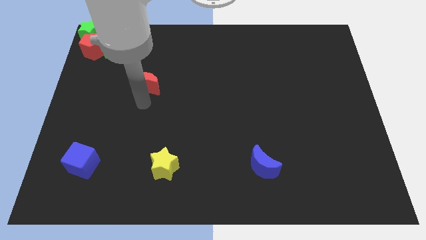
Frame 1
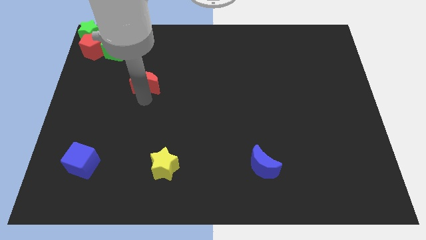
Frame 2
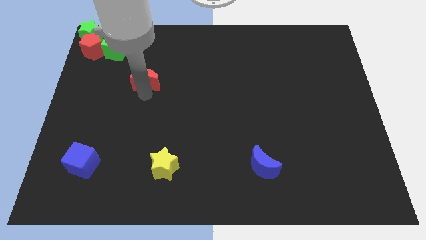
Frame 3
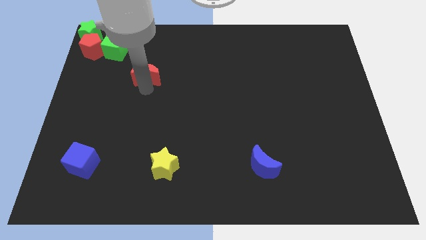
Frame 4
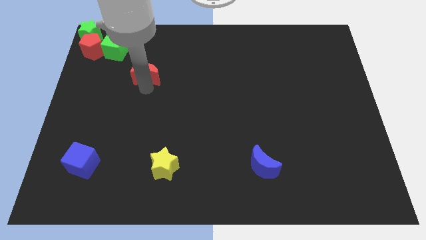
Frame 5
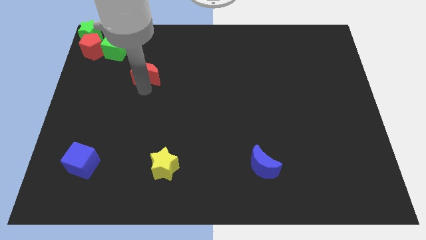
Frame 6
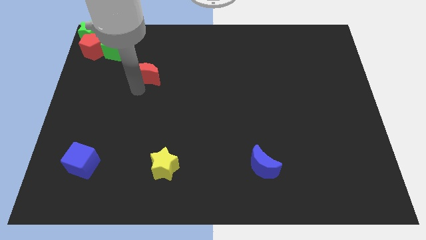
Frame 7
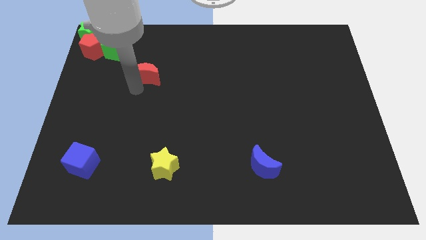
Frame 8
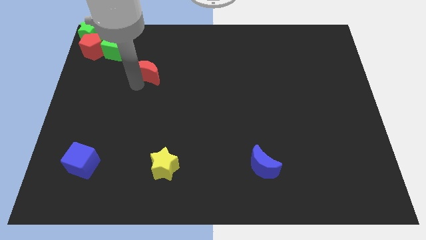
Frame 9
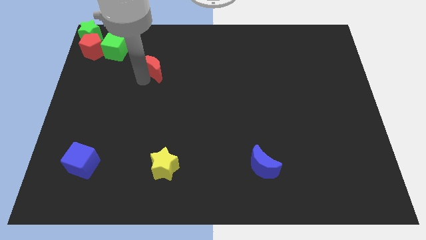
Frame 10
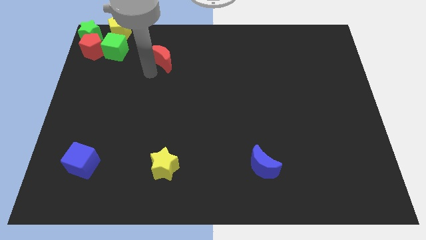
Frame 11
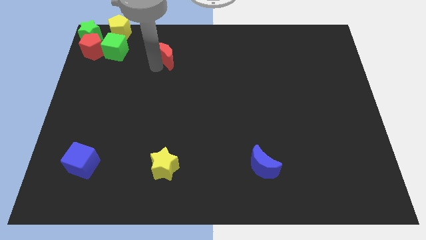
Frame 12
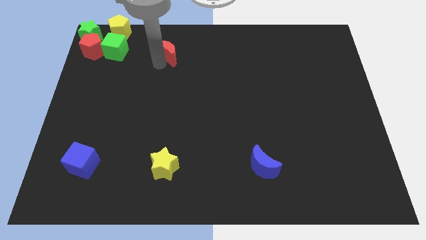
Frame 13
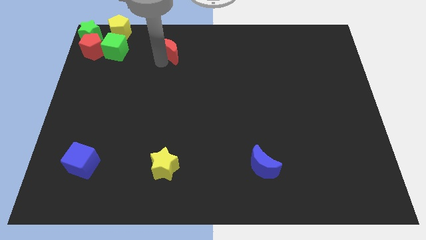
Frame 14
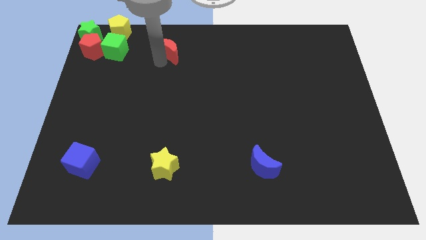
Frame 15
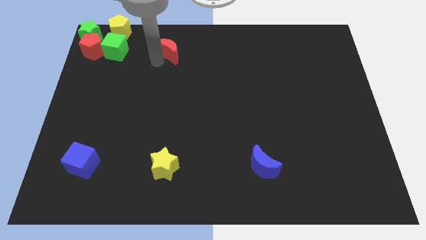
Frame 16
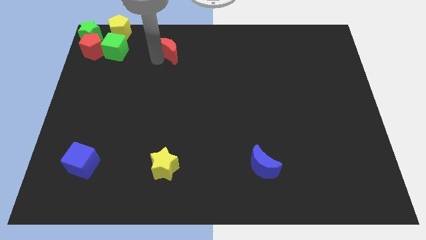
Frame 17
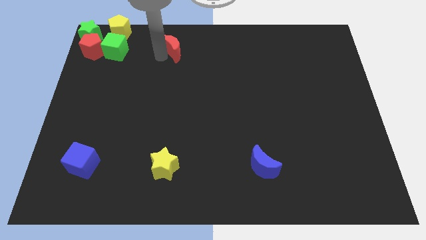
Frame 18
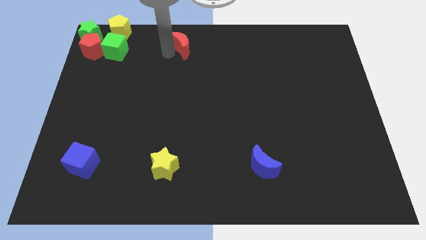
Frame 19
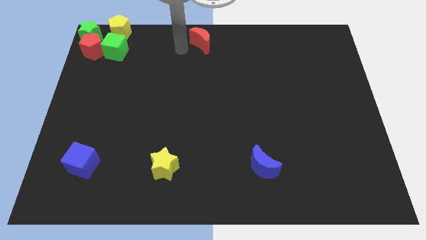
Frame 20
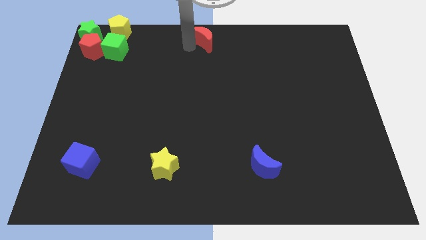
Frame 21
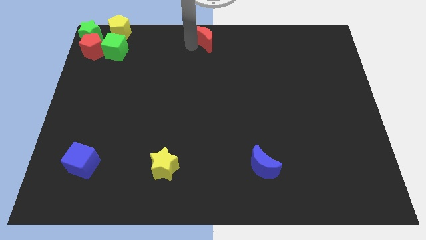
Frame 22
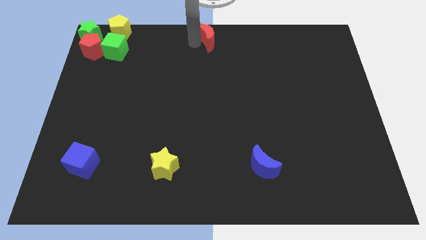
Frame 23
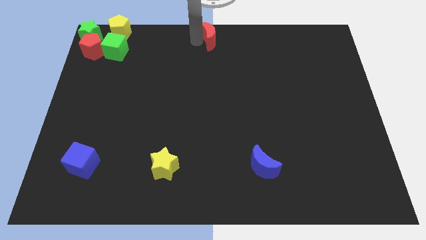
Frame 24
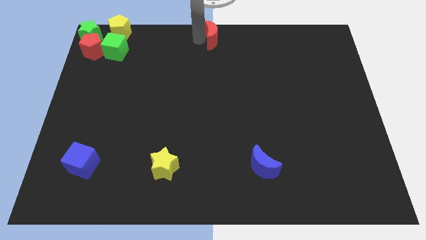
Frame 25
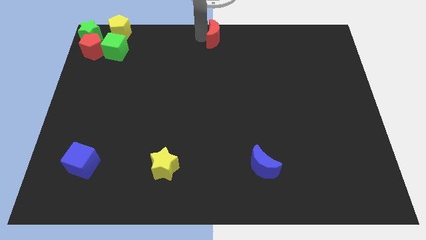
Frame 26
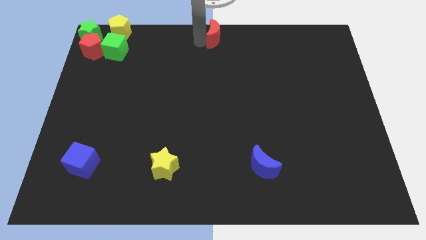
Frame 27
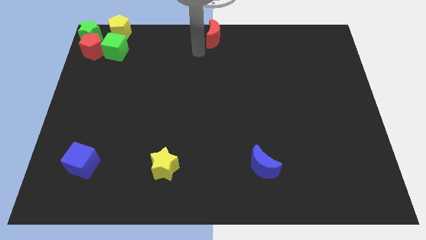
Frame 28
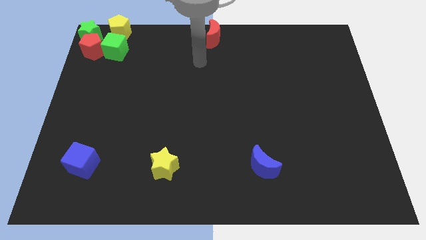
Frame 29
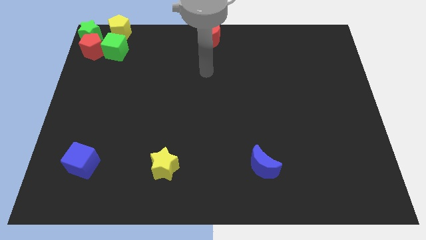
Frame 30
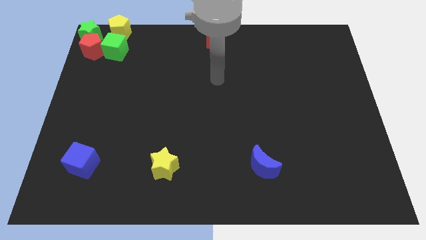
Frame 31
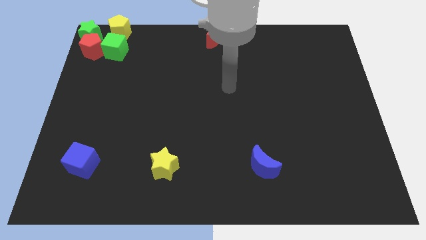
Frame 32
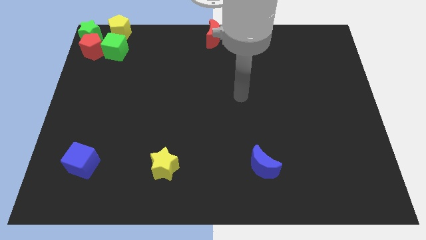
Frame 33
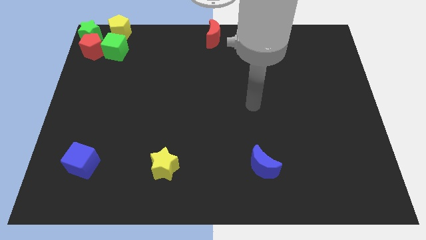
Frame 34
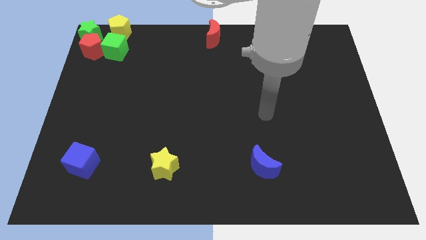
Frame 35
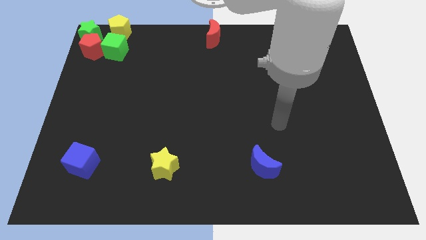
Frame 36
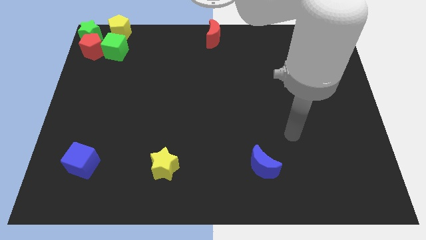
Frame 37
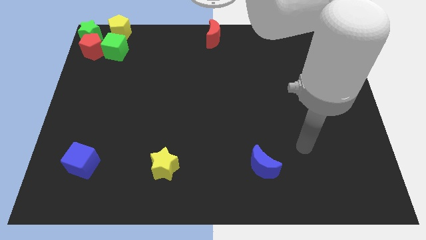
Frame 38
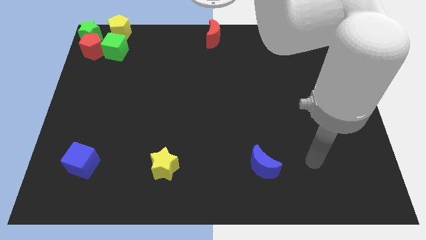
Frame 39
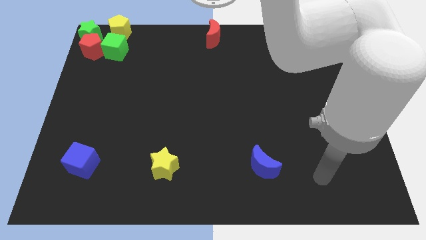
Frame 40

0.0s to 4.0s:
drag the red moon diagonally top right to the yellow star

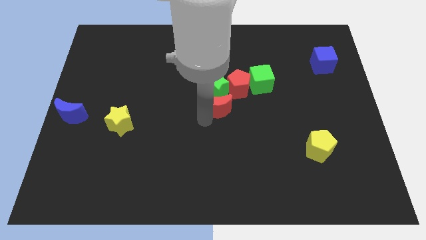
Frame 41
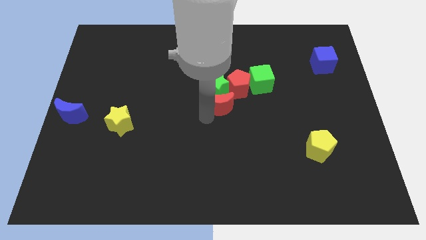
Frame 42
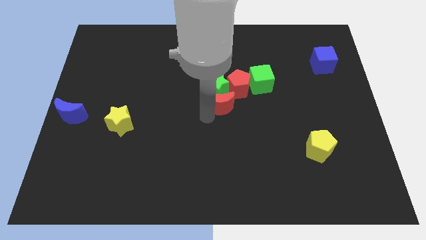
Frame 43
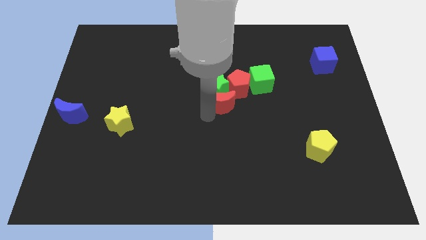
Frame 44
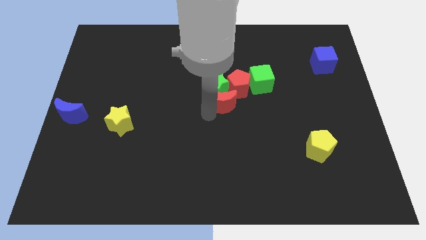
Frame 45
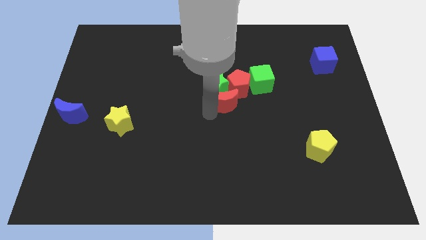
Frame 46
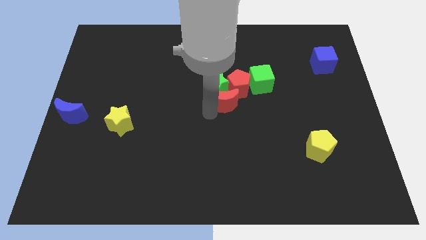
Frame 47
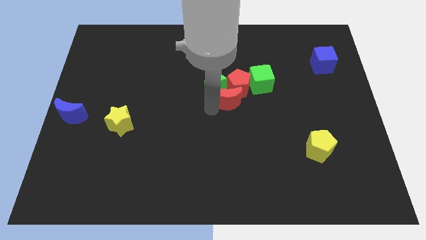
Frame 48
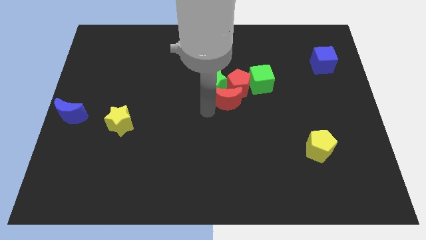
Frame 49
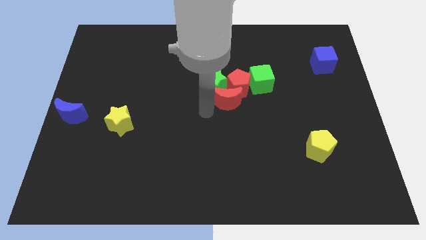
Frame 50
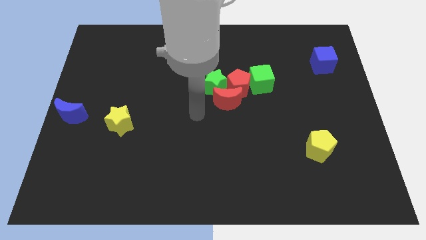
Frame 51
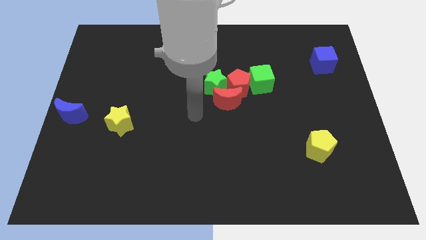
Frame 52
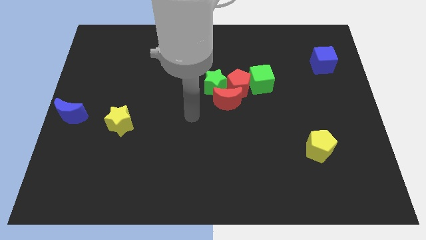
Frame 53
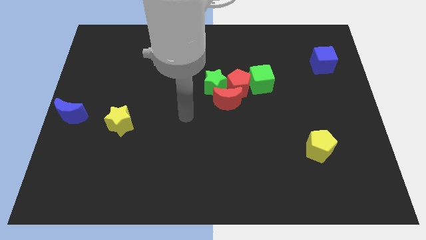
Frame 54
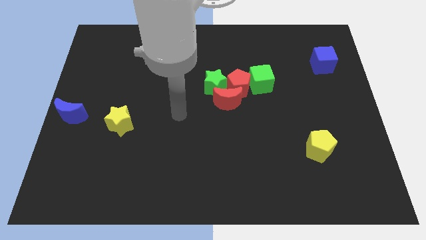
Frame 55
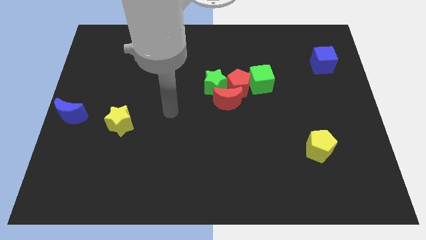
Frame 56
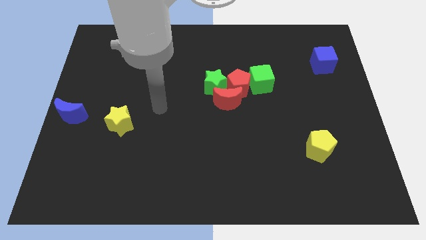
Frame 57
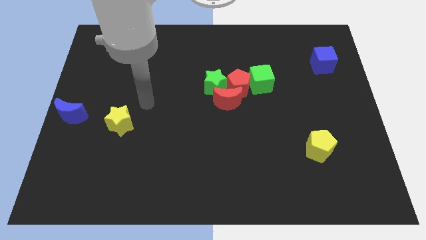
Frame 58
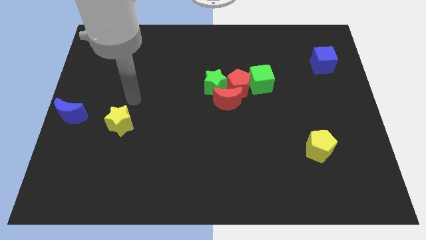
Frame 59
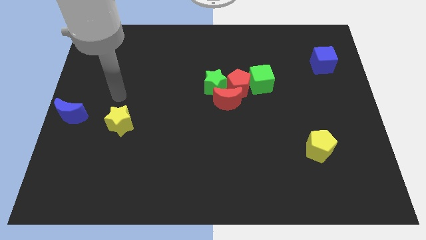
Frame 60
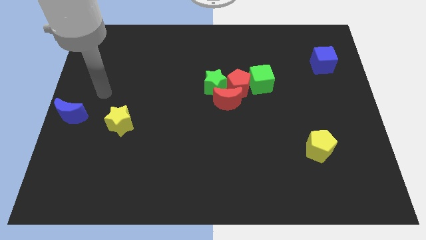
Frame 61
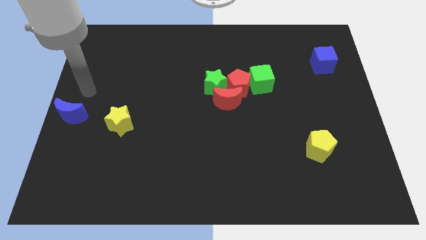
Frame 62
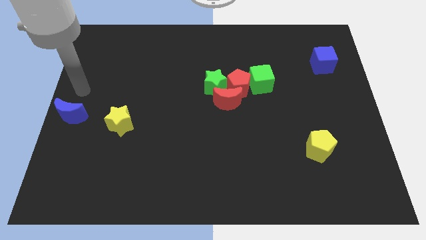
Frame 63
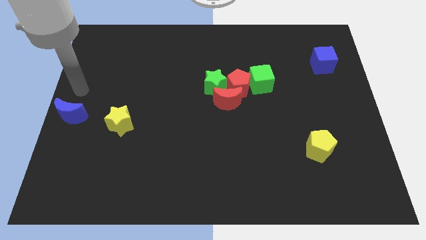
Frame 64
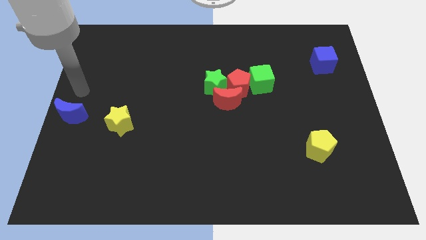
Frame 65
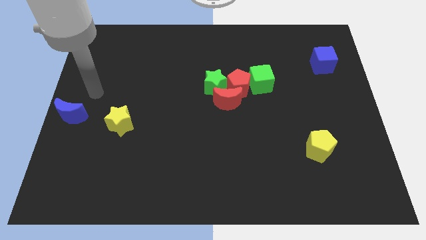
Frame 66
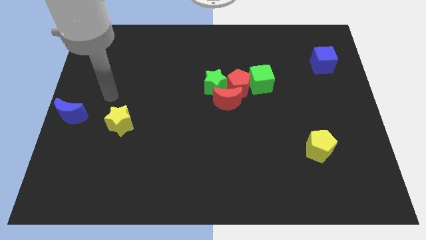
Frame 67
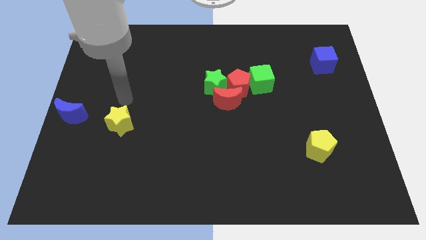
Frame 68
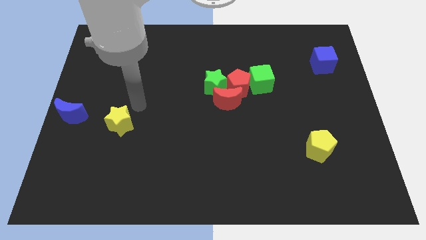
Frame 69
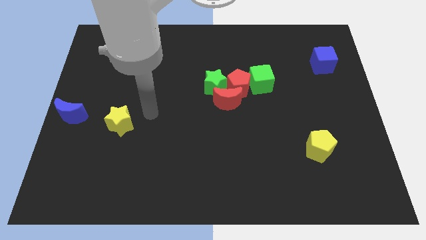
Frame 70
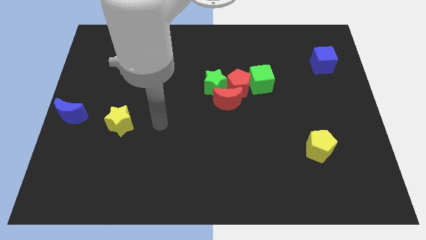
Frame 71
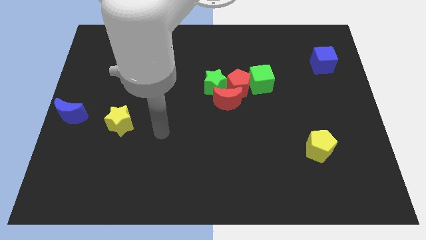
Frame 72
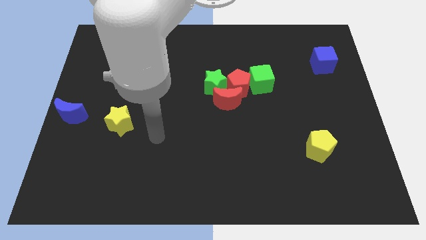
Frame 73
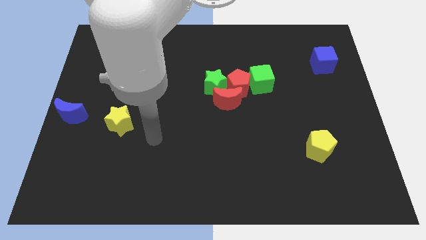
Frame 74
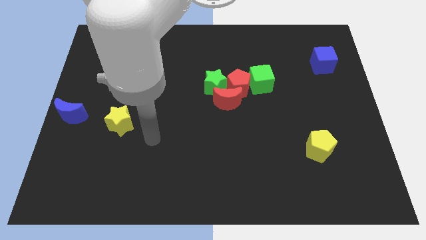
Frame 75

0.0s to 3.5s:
make a triangle out of red blocks and the green star

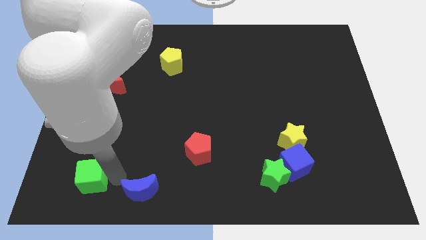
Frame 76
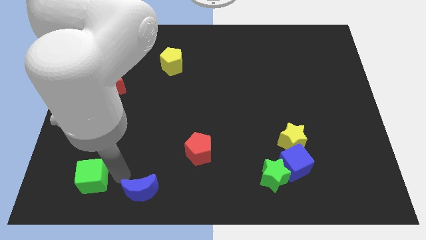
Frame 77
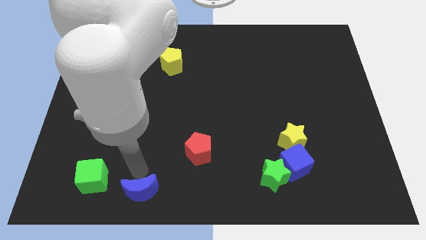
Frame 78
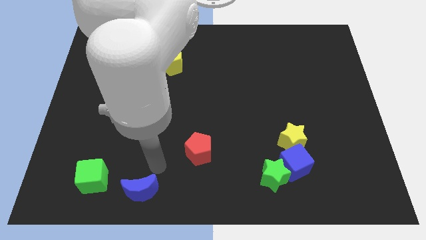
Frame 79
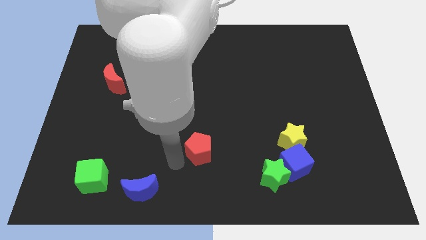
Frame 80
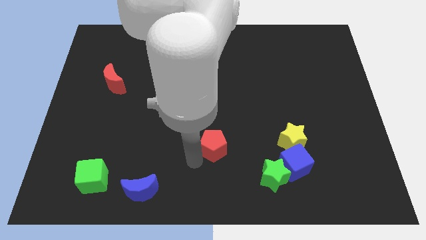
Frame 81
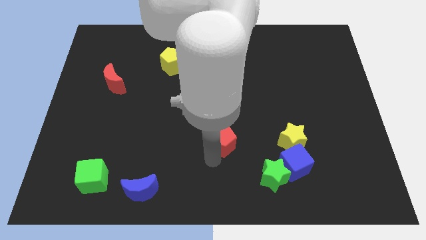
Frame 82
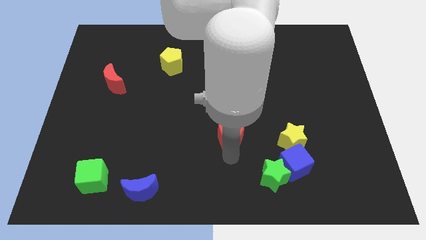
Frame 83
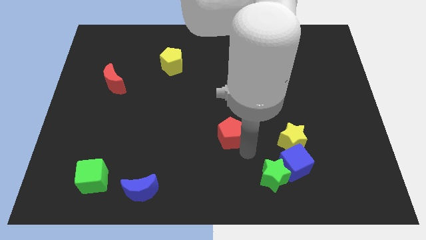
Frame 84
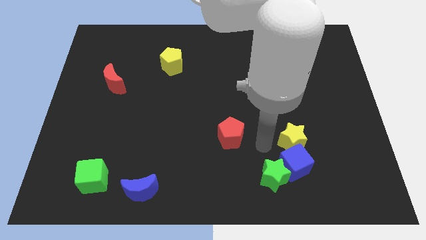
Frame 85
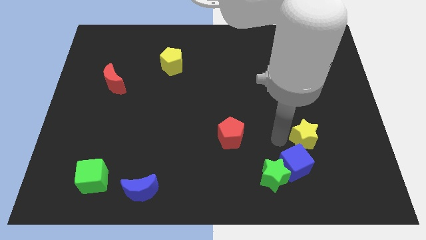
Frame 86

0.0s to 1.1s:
slightly push the red pentagon to the top of the board

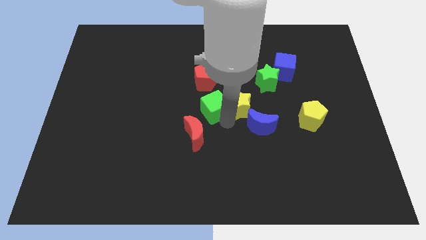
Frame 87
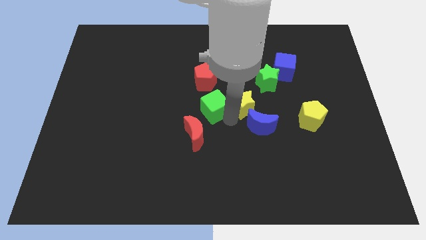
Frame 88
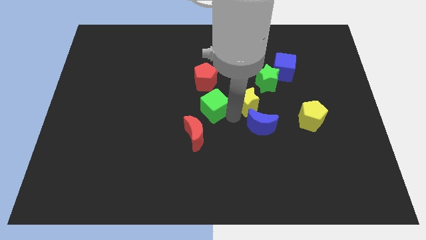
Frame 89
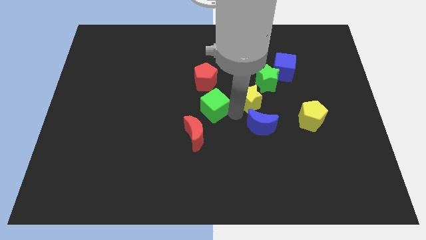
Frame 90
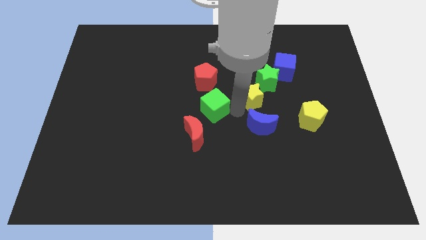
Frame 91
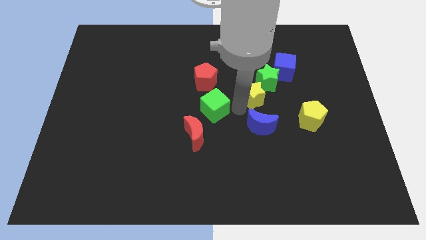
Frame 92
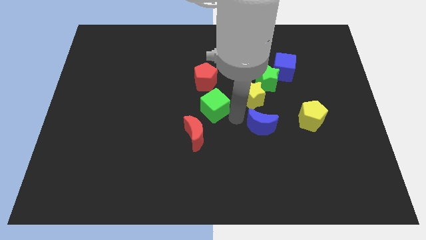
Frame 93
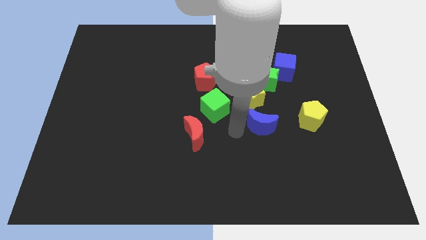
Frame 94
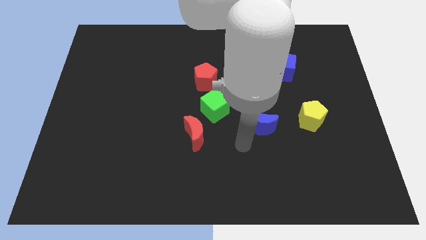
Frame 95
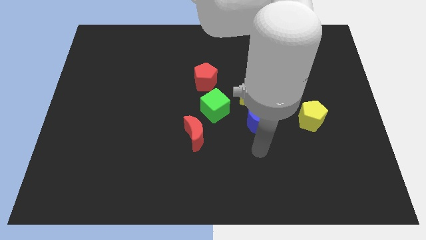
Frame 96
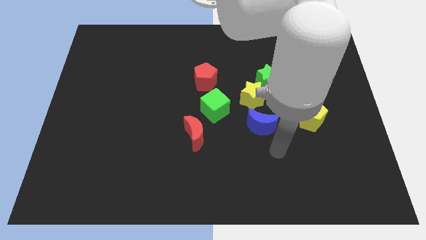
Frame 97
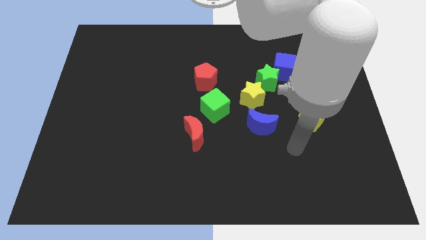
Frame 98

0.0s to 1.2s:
slide the yellow star to the bottom left side of the green star
